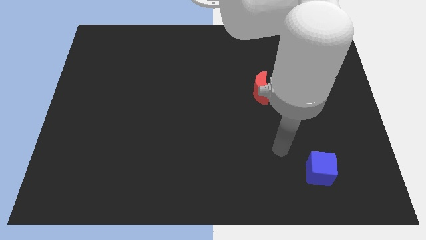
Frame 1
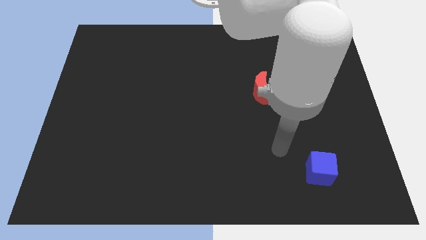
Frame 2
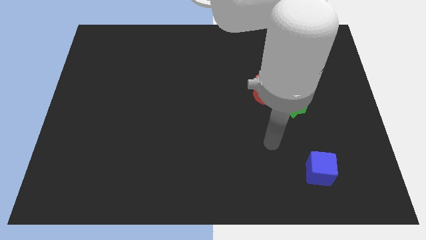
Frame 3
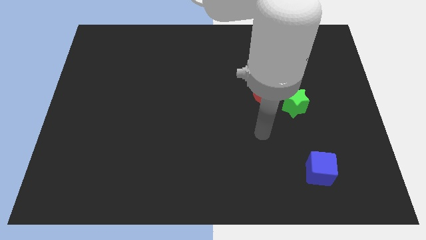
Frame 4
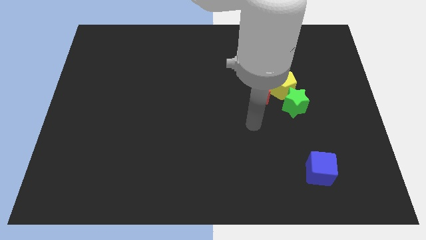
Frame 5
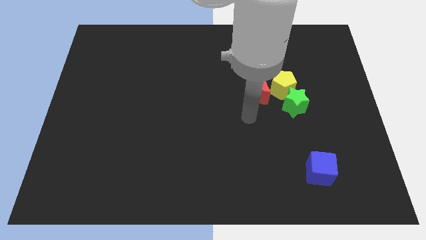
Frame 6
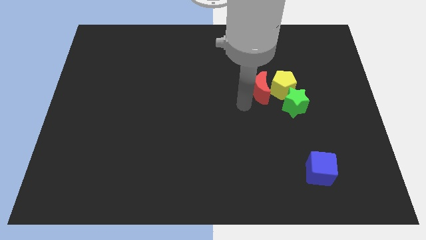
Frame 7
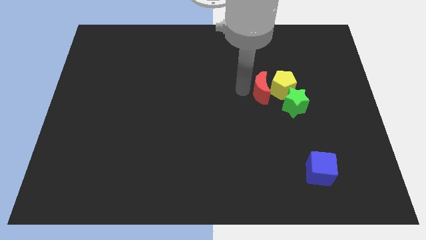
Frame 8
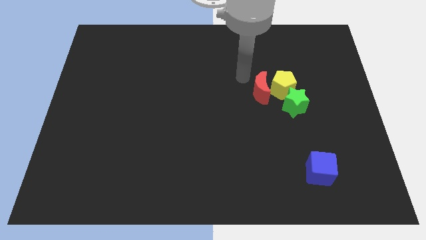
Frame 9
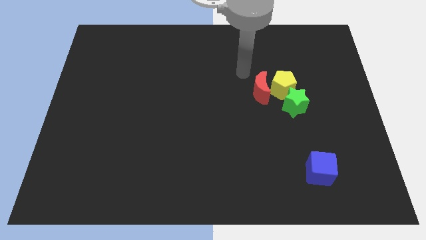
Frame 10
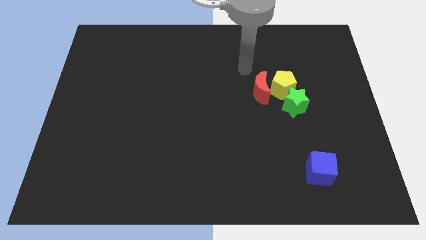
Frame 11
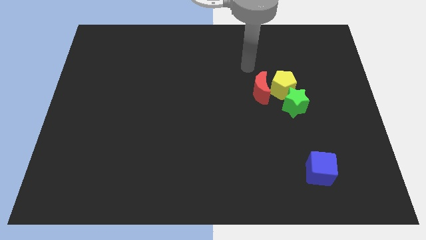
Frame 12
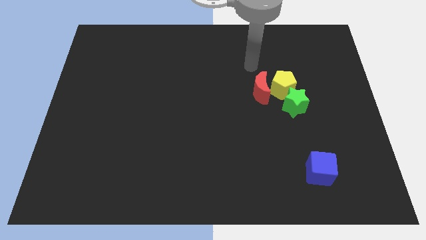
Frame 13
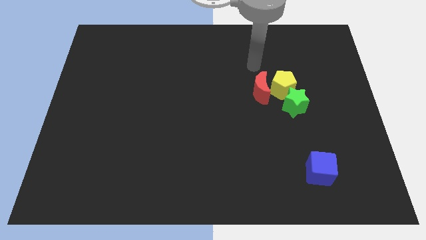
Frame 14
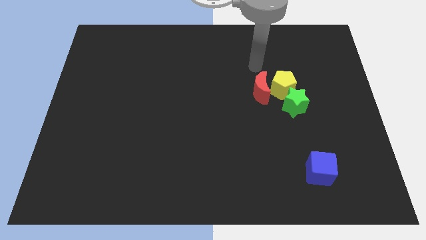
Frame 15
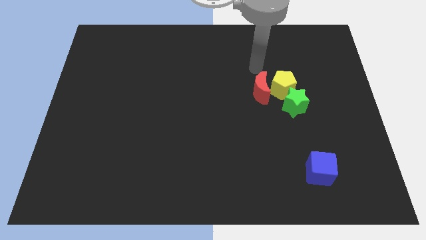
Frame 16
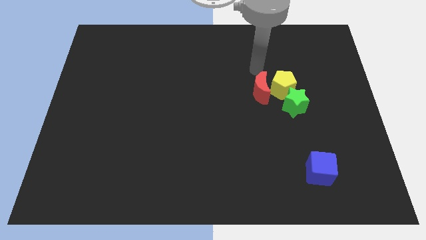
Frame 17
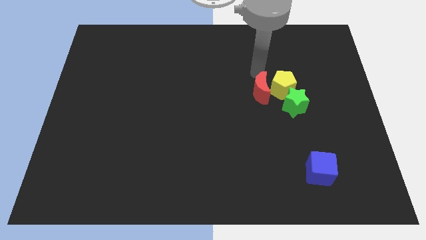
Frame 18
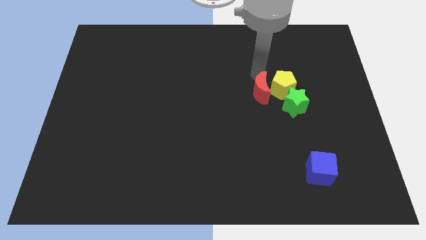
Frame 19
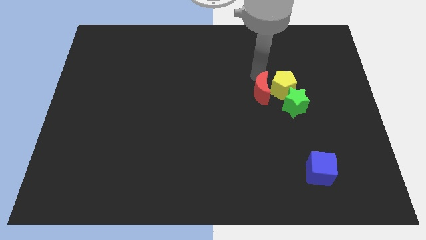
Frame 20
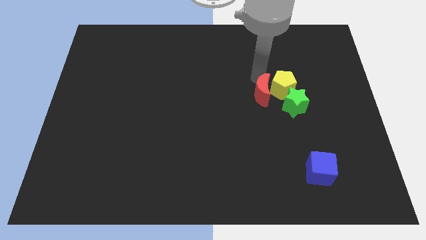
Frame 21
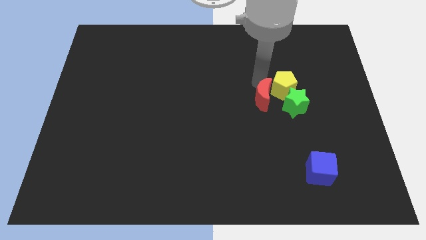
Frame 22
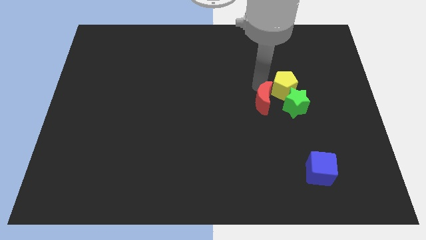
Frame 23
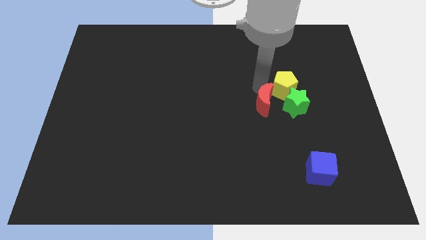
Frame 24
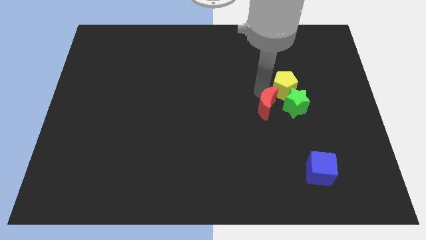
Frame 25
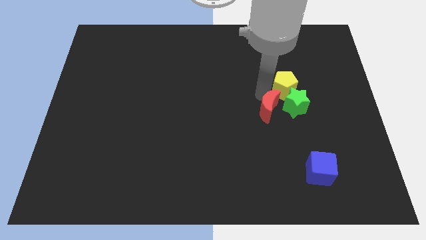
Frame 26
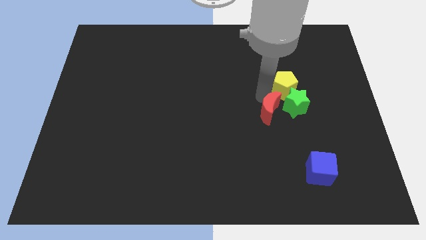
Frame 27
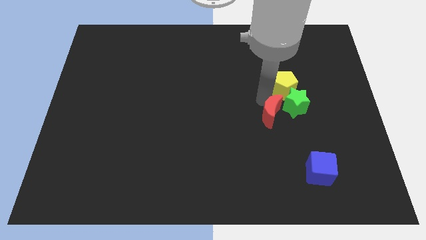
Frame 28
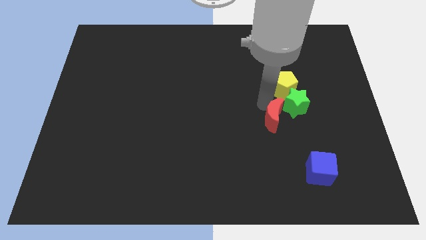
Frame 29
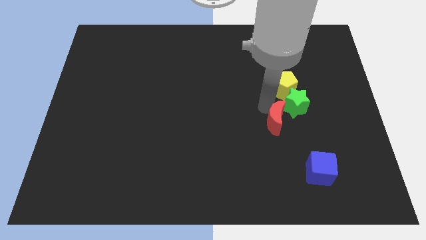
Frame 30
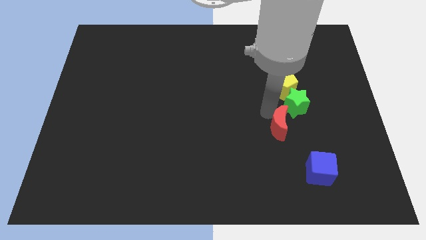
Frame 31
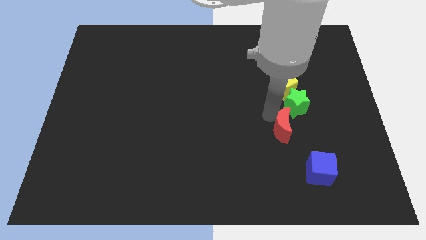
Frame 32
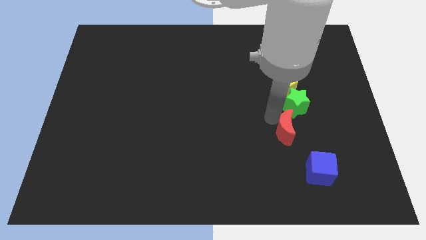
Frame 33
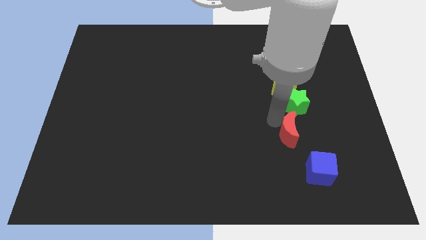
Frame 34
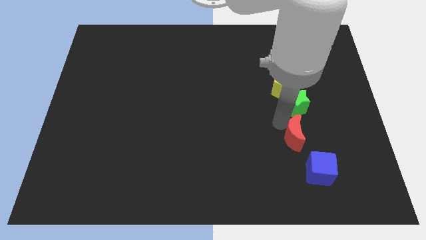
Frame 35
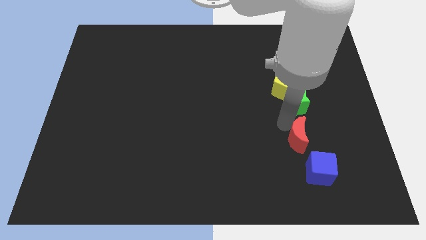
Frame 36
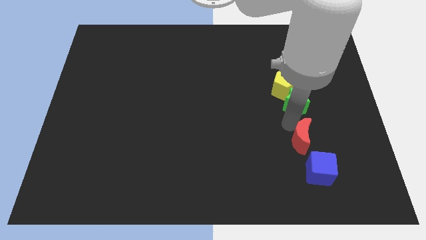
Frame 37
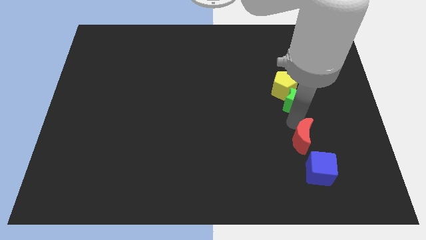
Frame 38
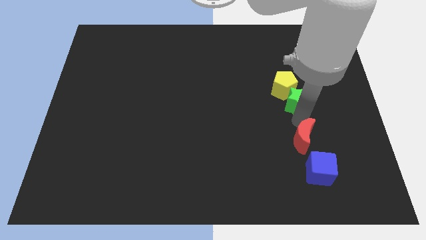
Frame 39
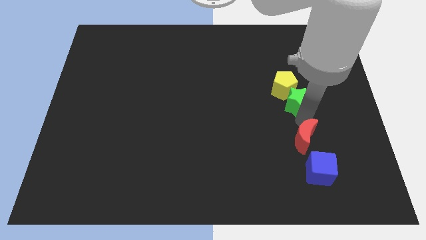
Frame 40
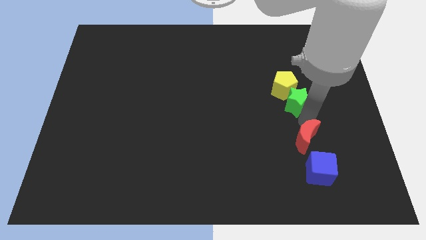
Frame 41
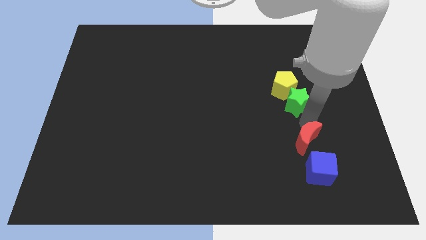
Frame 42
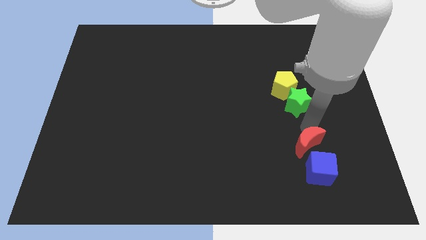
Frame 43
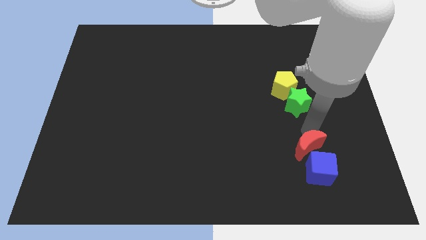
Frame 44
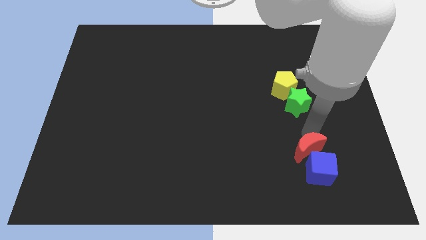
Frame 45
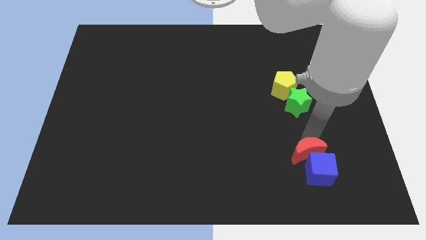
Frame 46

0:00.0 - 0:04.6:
slide the moon close to the blue cube

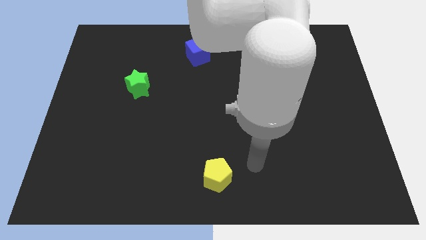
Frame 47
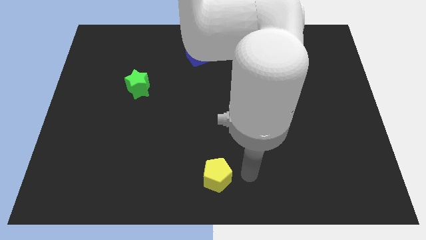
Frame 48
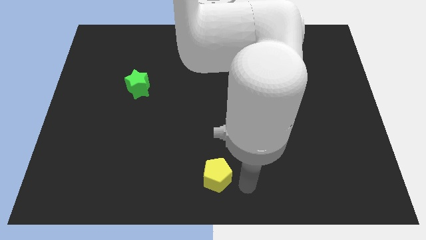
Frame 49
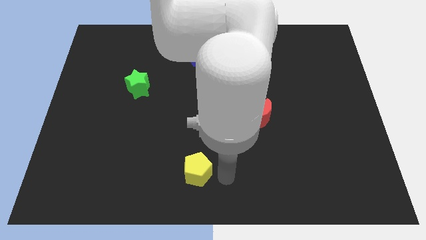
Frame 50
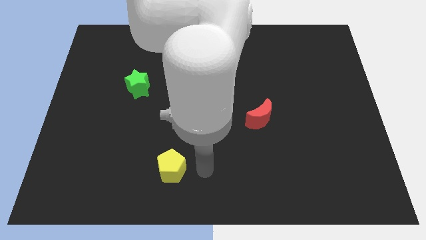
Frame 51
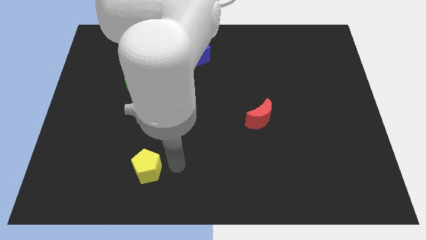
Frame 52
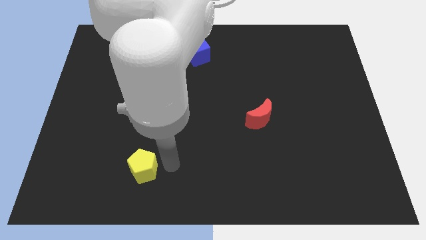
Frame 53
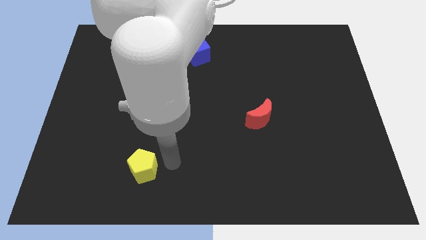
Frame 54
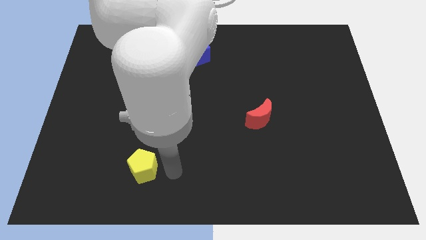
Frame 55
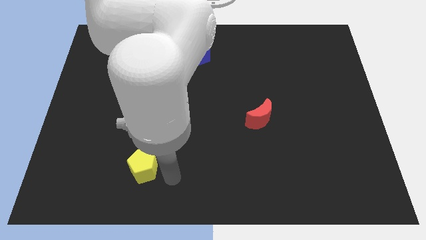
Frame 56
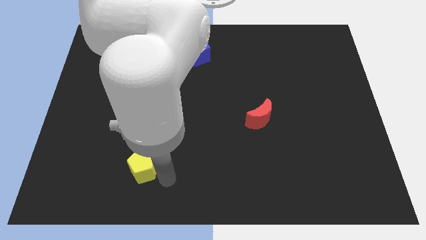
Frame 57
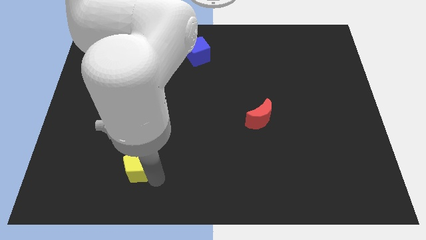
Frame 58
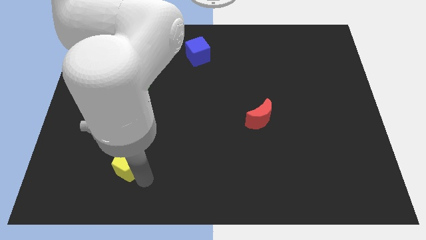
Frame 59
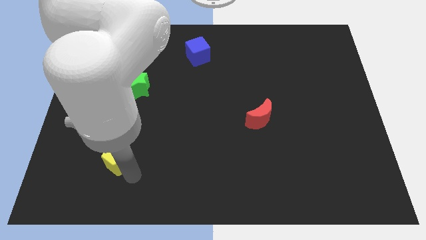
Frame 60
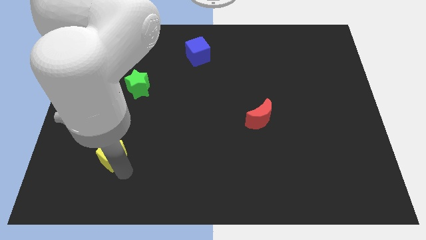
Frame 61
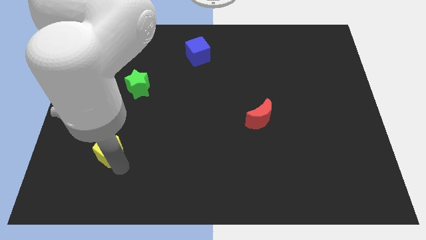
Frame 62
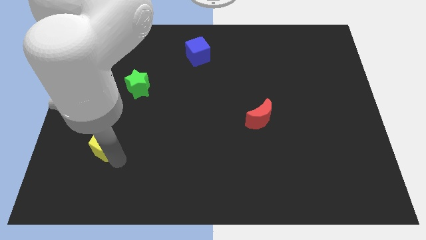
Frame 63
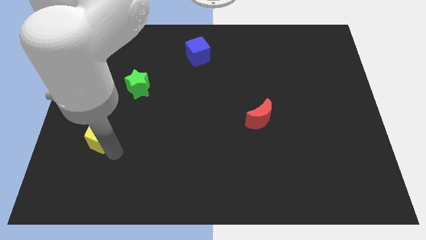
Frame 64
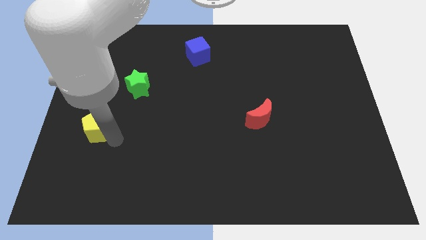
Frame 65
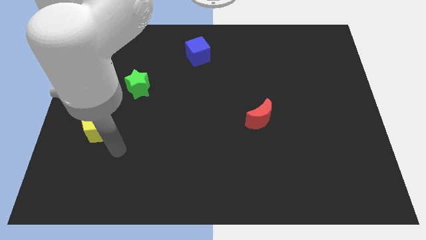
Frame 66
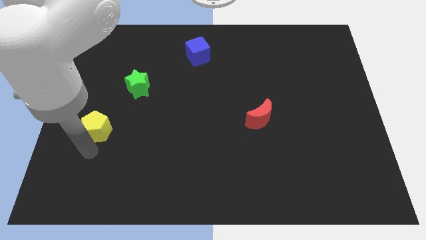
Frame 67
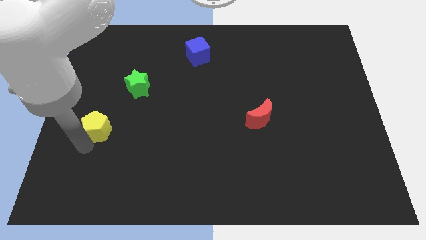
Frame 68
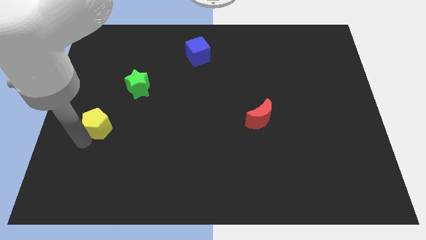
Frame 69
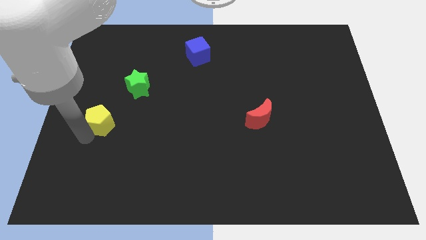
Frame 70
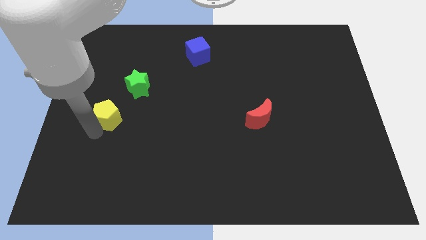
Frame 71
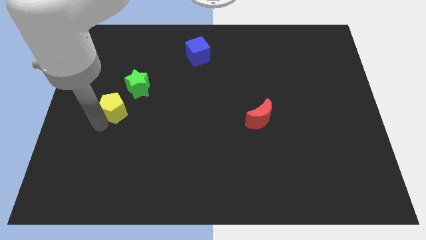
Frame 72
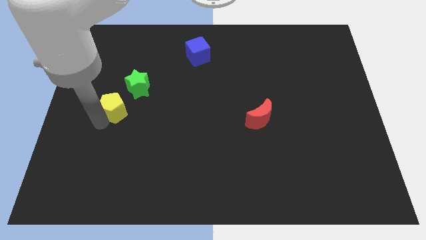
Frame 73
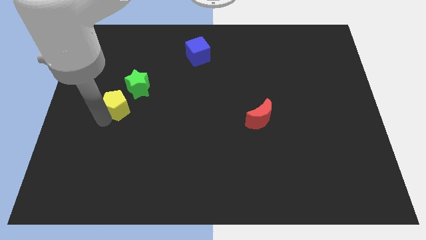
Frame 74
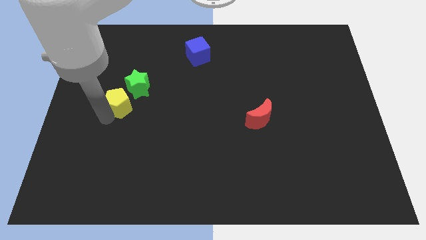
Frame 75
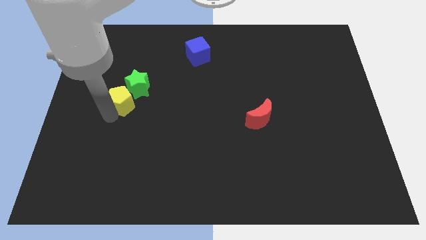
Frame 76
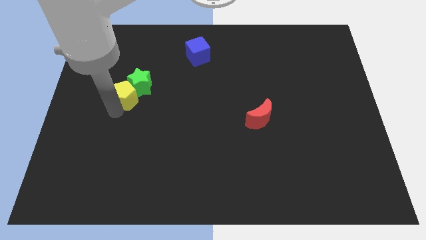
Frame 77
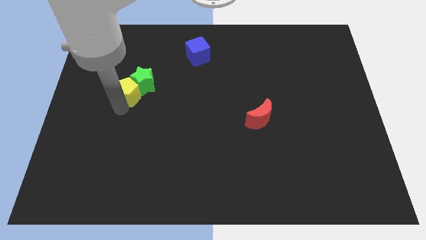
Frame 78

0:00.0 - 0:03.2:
push the yellow pentagon to the star

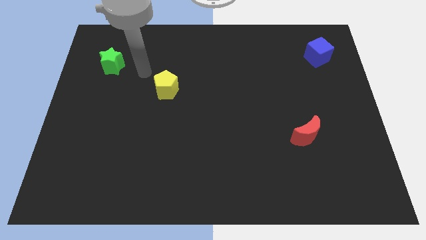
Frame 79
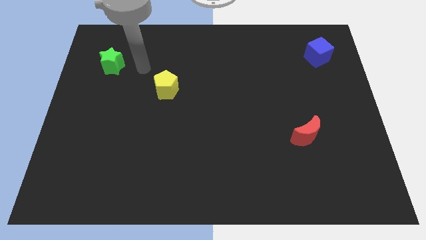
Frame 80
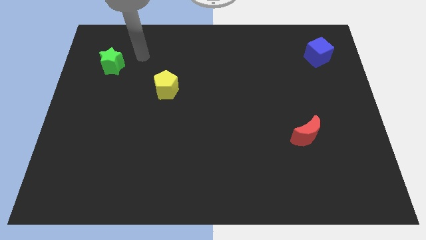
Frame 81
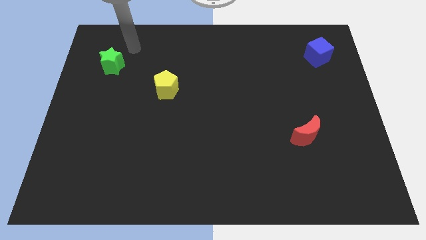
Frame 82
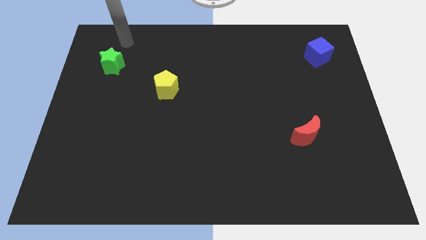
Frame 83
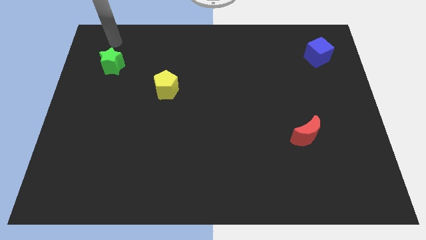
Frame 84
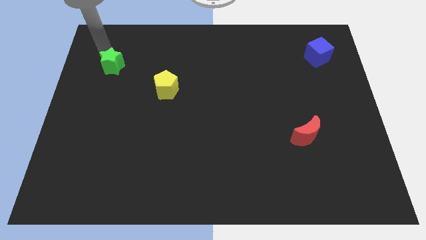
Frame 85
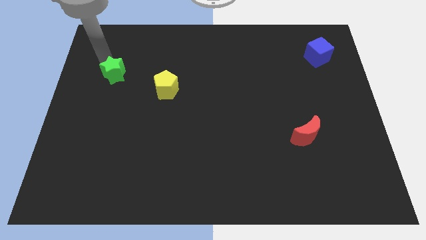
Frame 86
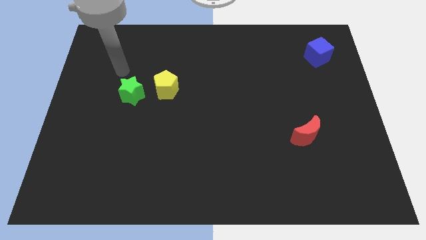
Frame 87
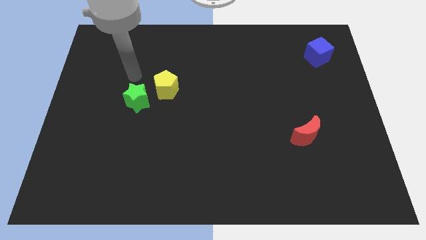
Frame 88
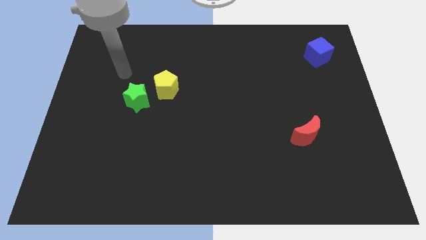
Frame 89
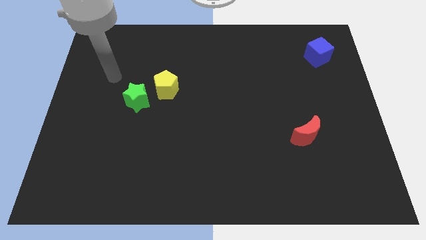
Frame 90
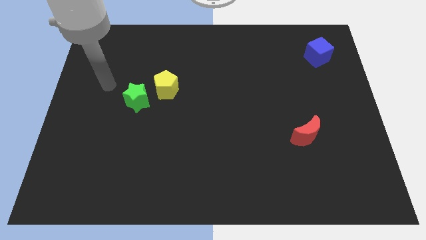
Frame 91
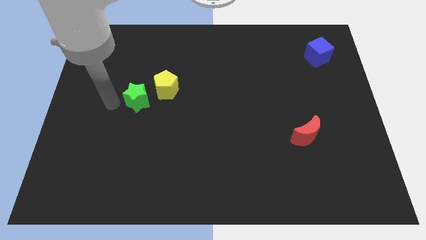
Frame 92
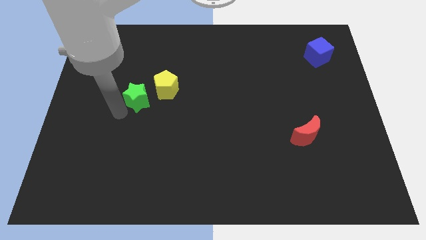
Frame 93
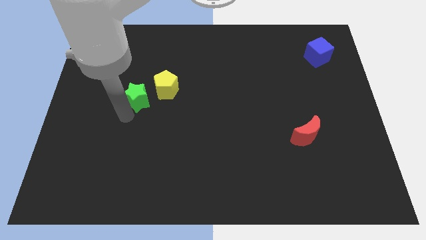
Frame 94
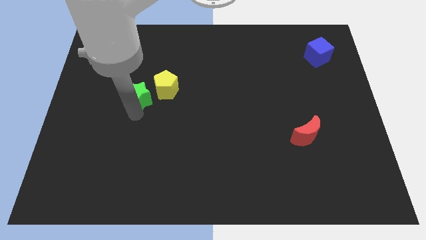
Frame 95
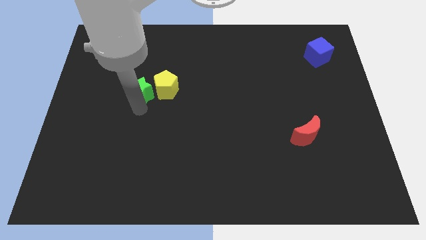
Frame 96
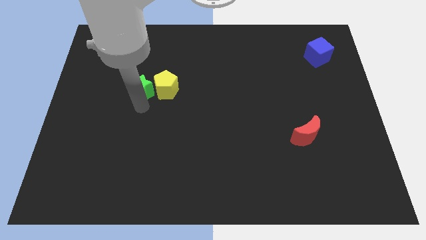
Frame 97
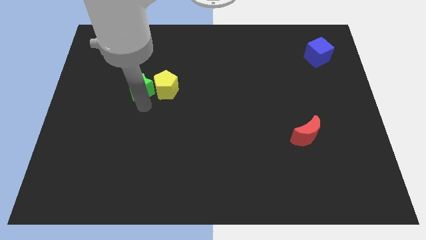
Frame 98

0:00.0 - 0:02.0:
push the star to the yellow block
